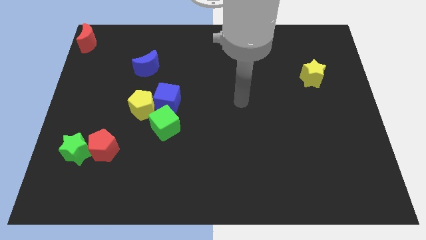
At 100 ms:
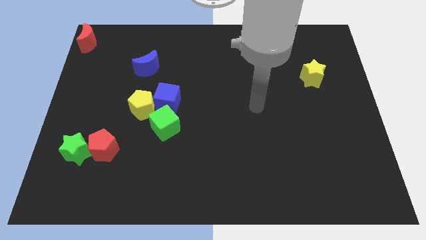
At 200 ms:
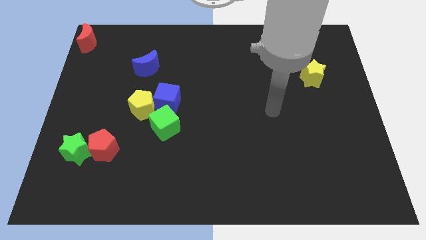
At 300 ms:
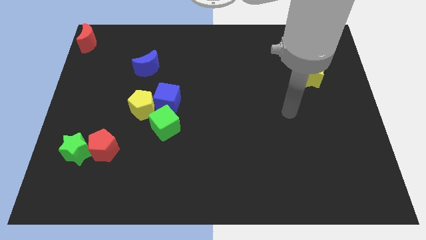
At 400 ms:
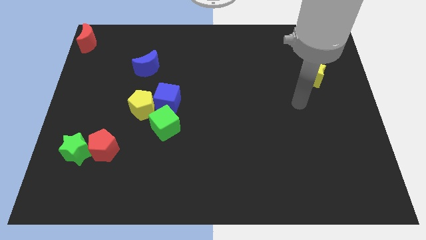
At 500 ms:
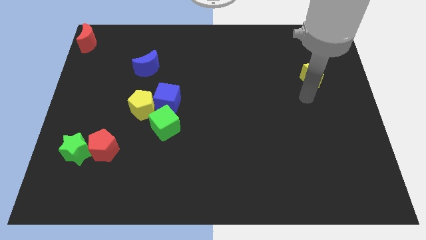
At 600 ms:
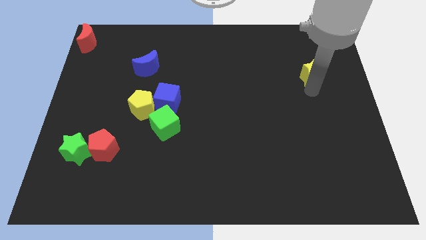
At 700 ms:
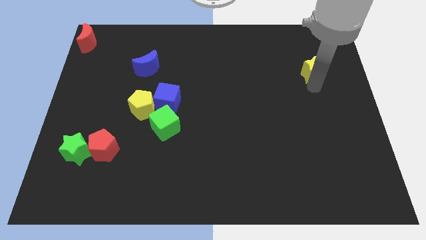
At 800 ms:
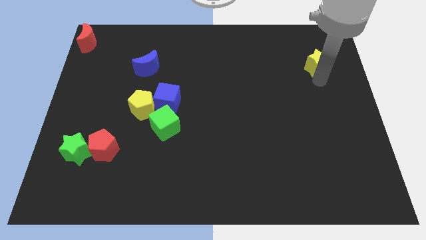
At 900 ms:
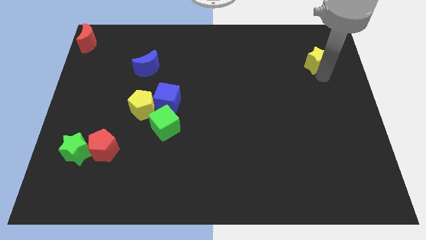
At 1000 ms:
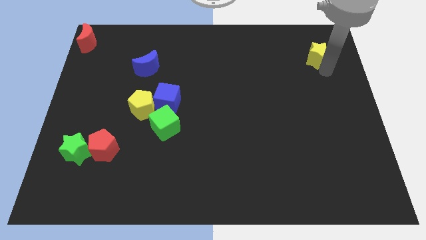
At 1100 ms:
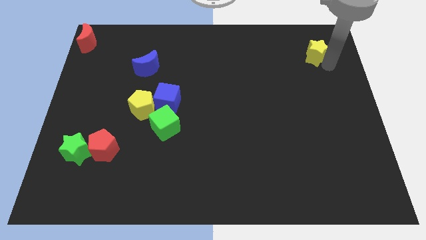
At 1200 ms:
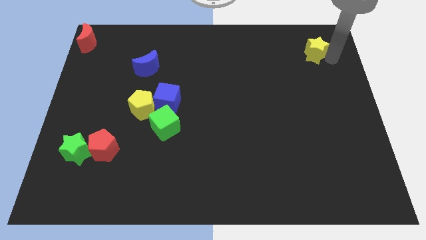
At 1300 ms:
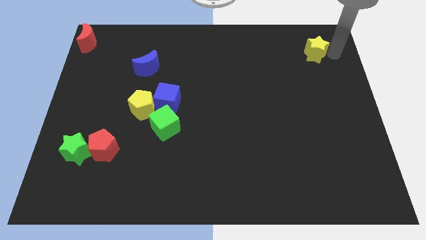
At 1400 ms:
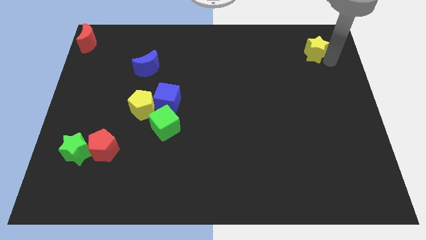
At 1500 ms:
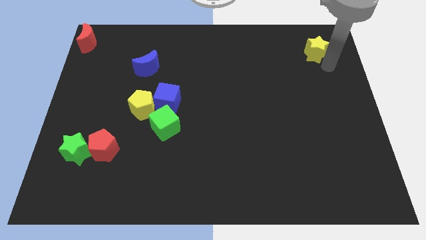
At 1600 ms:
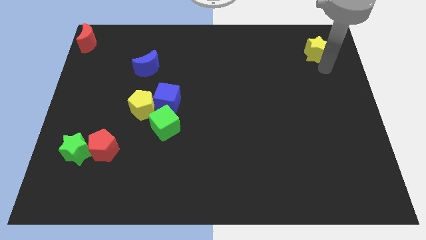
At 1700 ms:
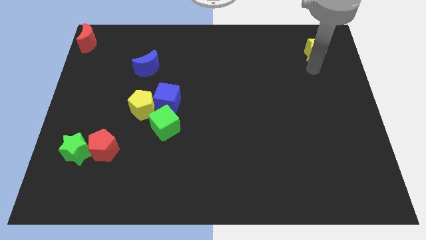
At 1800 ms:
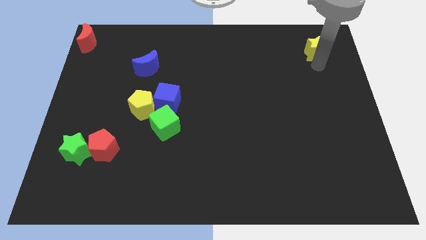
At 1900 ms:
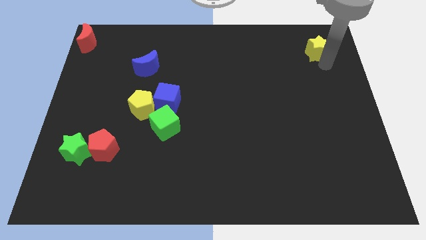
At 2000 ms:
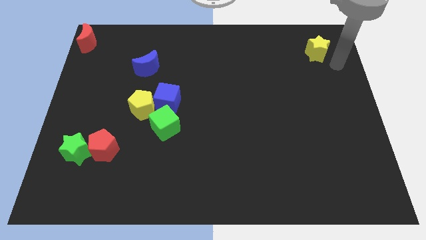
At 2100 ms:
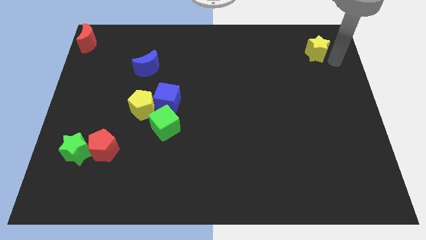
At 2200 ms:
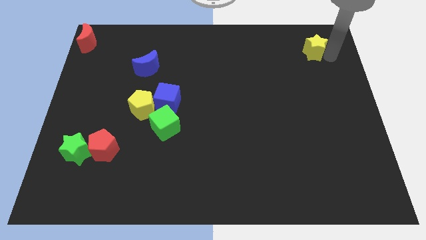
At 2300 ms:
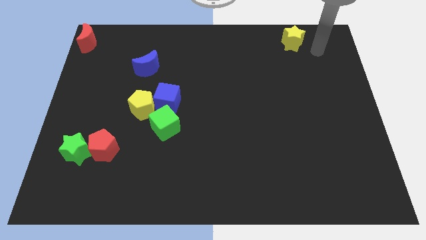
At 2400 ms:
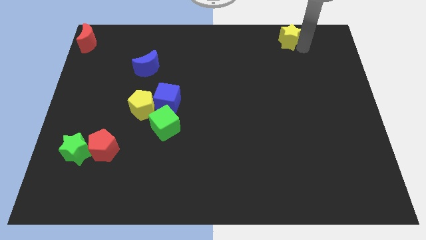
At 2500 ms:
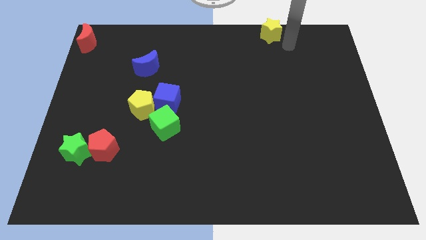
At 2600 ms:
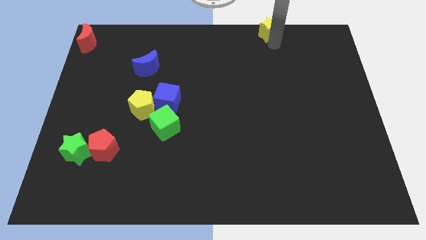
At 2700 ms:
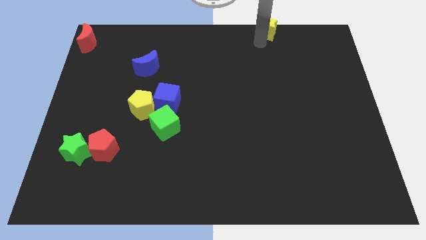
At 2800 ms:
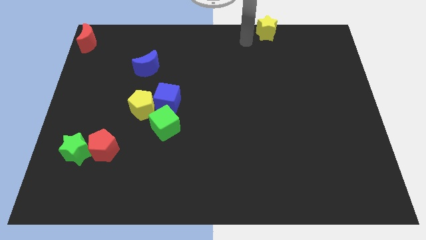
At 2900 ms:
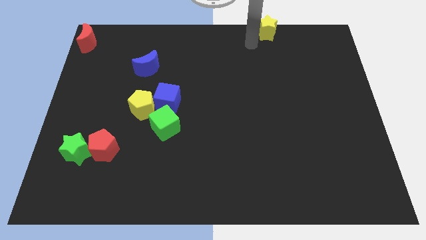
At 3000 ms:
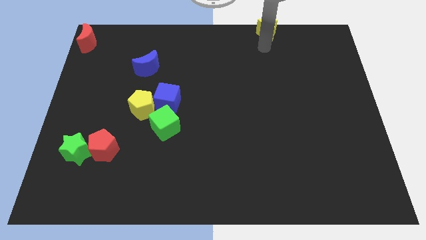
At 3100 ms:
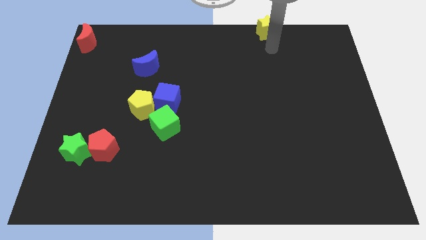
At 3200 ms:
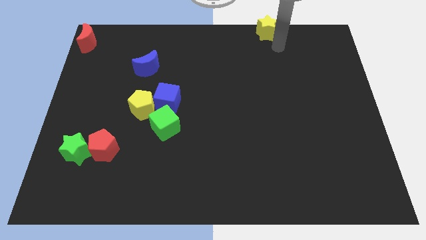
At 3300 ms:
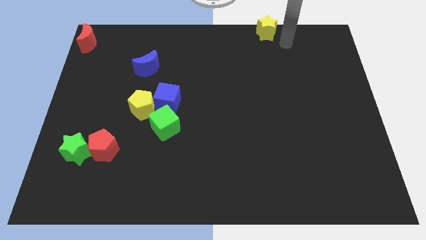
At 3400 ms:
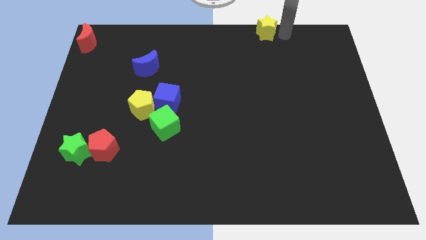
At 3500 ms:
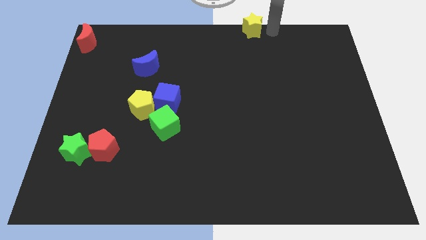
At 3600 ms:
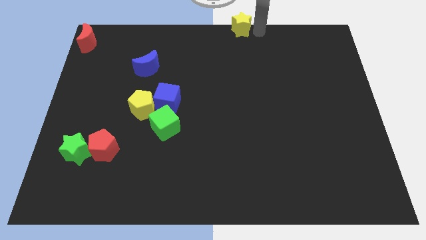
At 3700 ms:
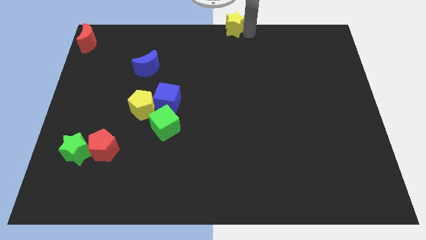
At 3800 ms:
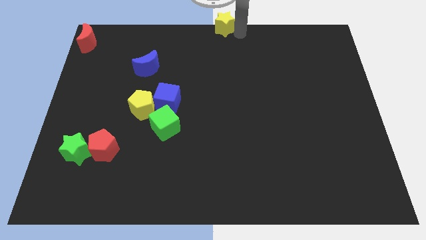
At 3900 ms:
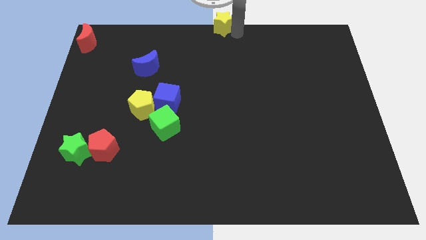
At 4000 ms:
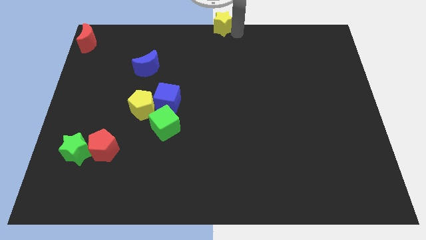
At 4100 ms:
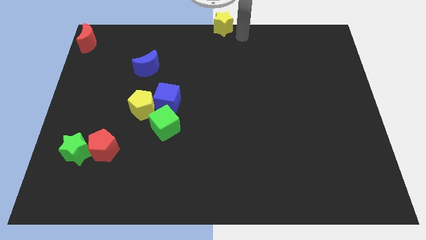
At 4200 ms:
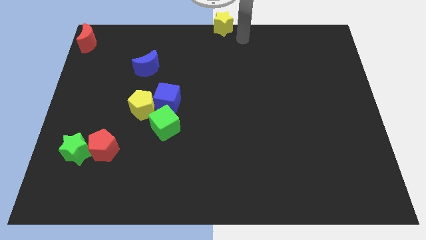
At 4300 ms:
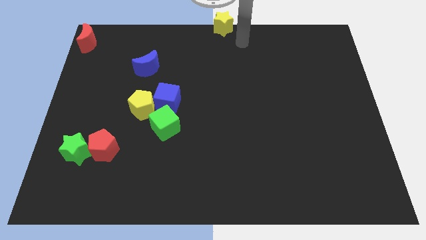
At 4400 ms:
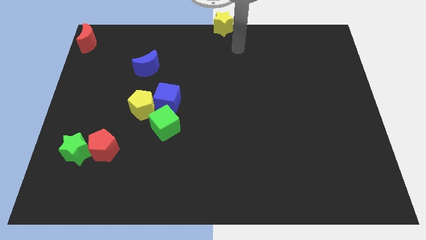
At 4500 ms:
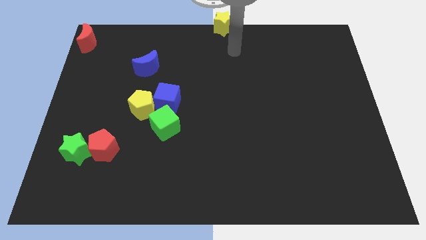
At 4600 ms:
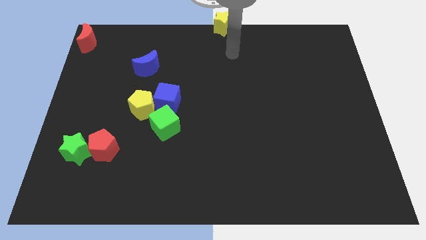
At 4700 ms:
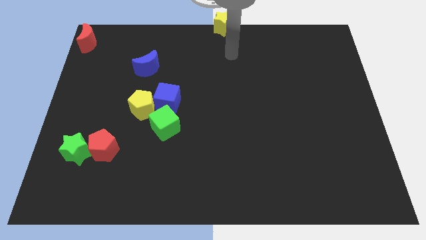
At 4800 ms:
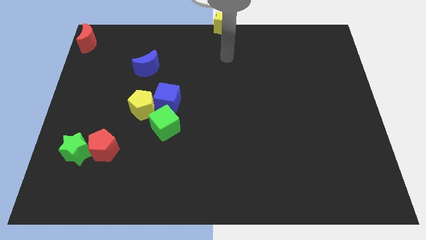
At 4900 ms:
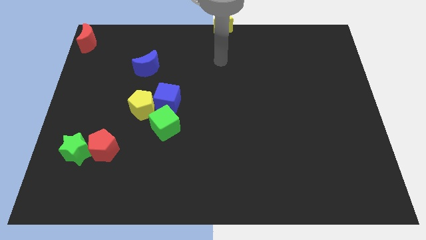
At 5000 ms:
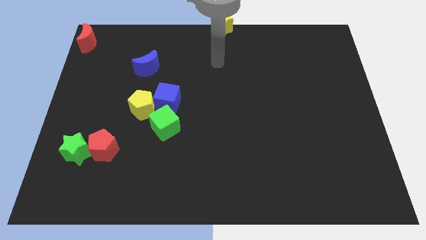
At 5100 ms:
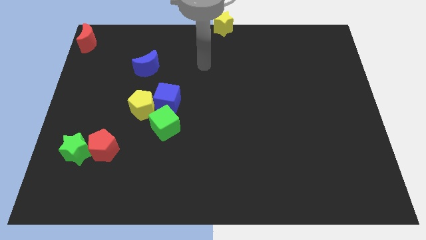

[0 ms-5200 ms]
place the yellow star at the top center of the board

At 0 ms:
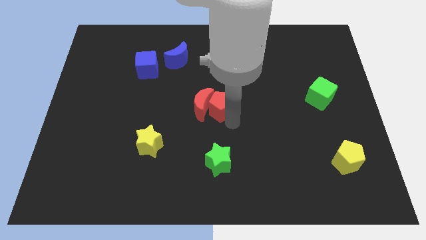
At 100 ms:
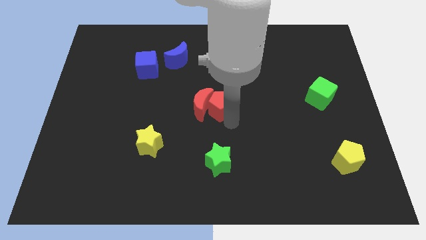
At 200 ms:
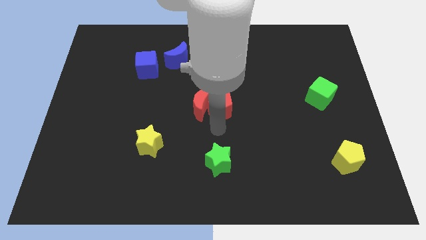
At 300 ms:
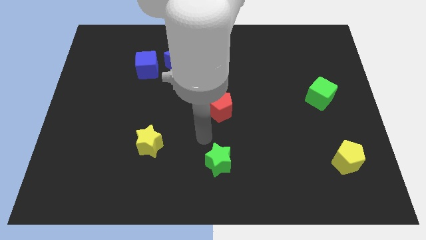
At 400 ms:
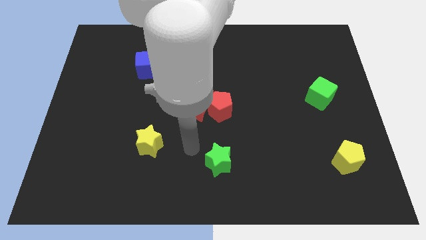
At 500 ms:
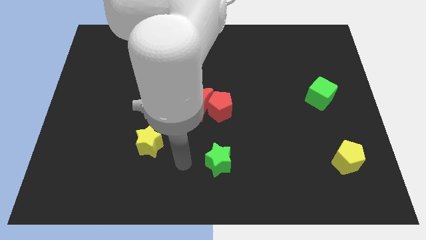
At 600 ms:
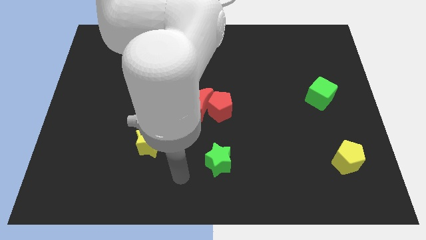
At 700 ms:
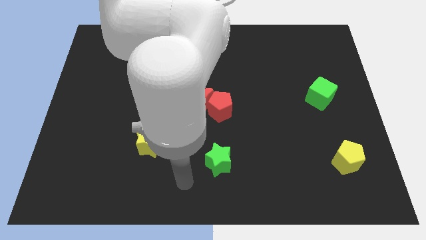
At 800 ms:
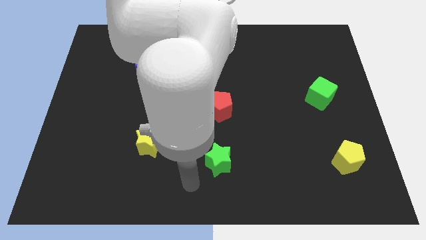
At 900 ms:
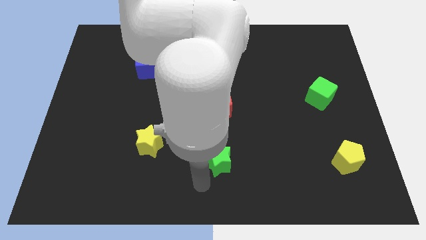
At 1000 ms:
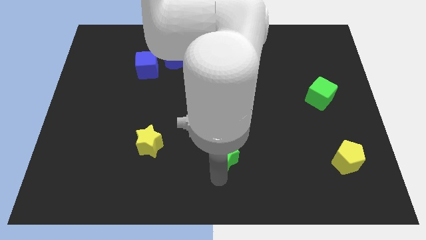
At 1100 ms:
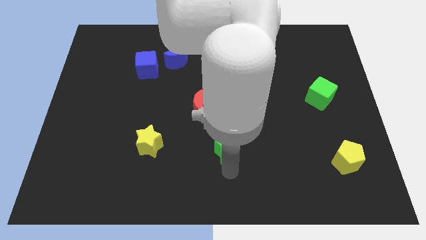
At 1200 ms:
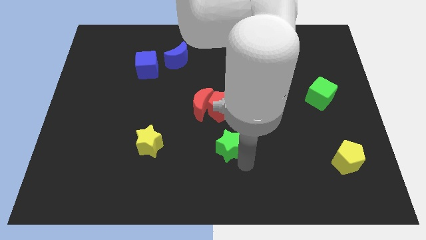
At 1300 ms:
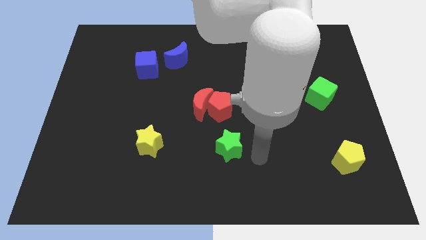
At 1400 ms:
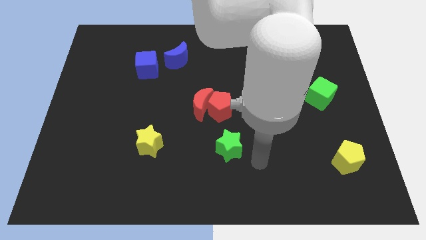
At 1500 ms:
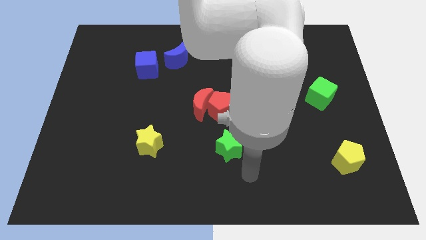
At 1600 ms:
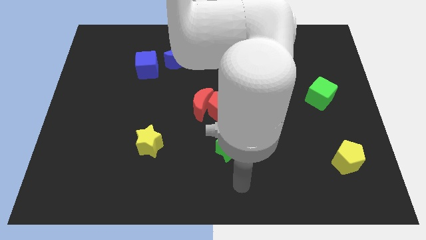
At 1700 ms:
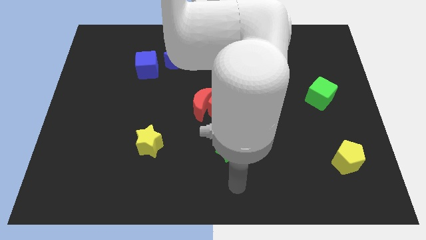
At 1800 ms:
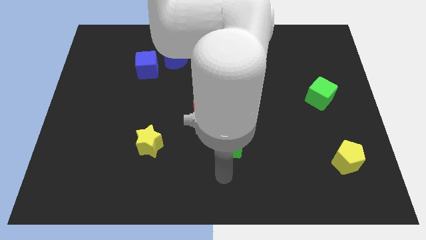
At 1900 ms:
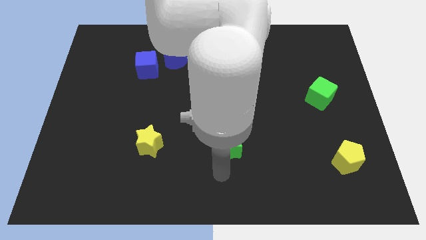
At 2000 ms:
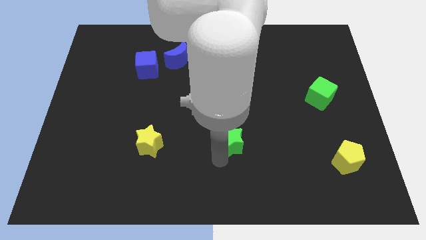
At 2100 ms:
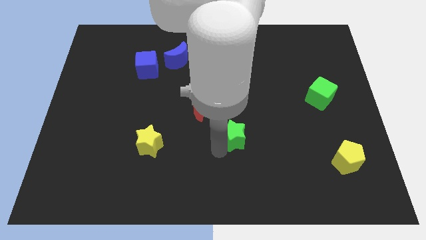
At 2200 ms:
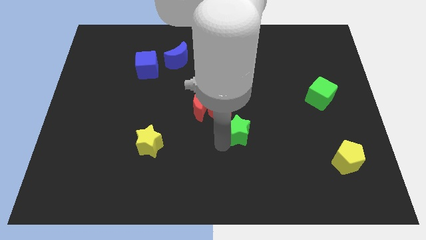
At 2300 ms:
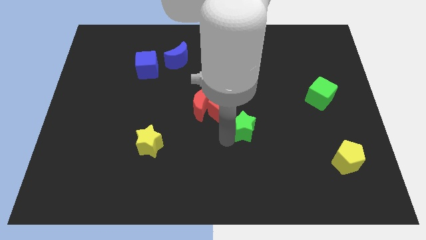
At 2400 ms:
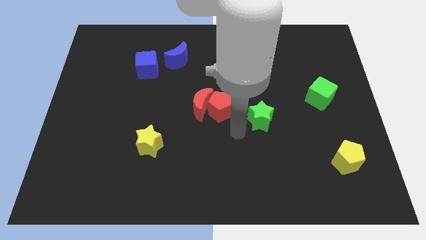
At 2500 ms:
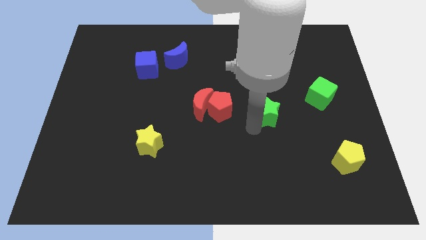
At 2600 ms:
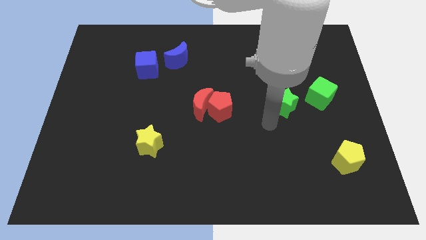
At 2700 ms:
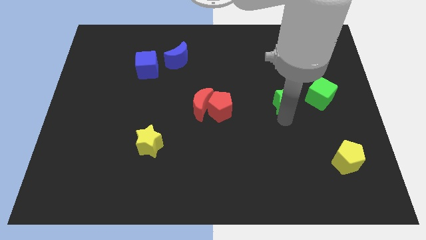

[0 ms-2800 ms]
place green star to the right of red pentagon

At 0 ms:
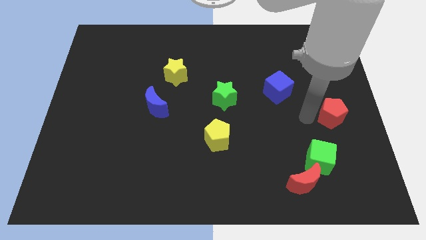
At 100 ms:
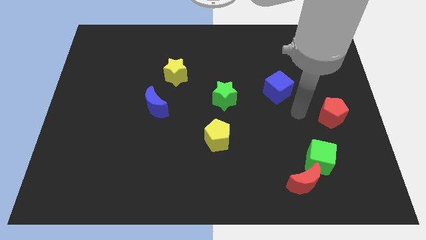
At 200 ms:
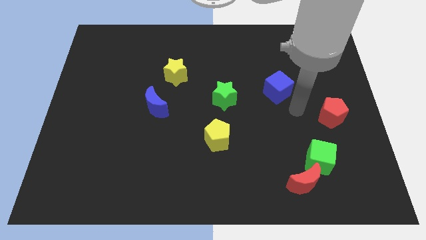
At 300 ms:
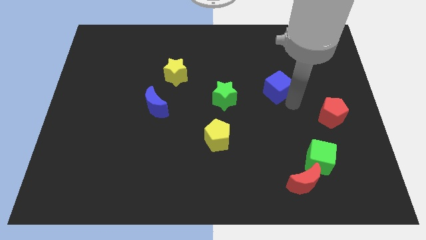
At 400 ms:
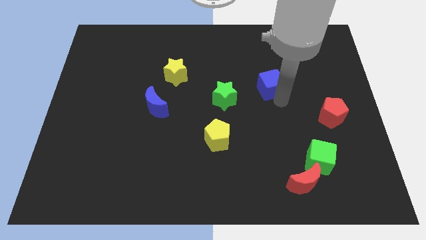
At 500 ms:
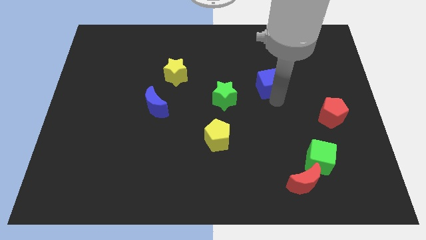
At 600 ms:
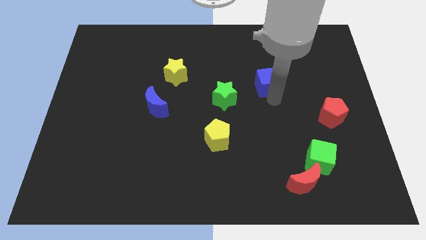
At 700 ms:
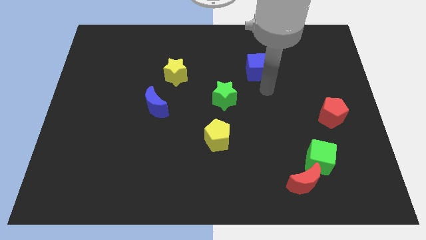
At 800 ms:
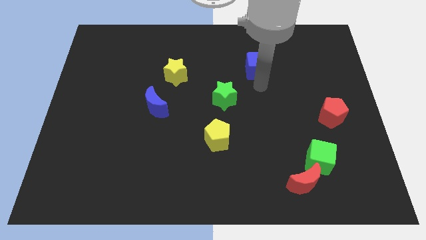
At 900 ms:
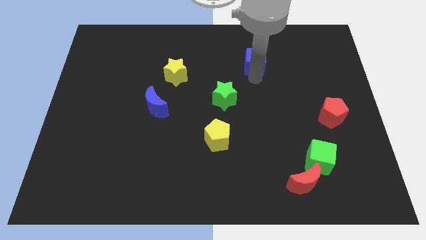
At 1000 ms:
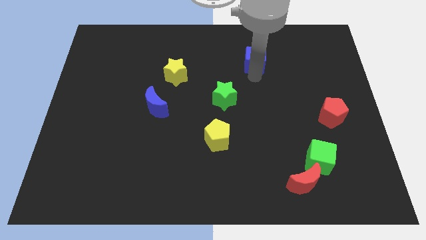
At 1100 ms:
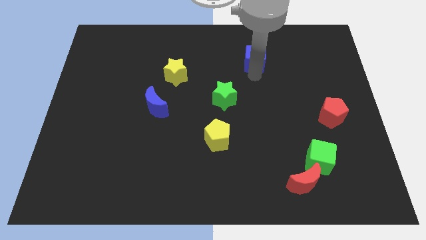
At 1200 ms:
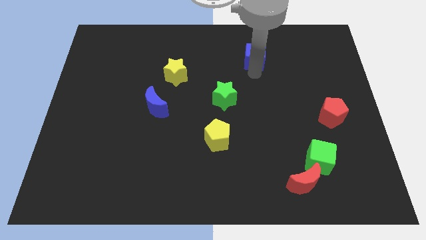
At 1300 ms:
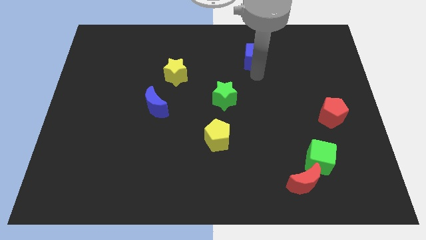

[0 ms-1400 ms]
push blue cube to the top of board
